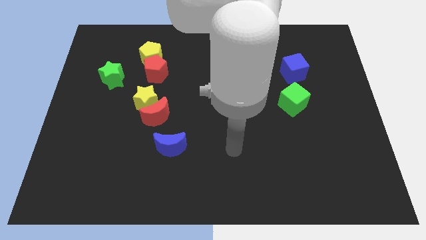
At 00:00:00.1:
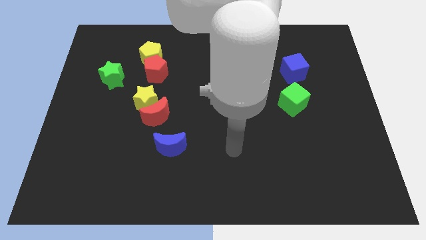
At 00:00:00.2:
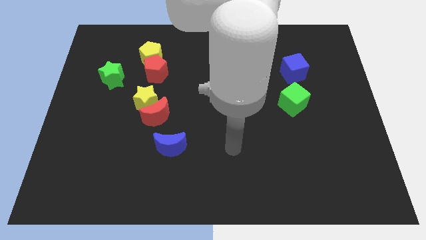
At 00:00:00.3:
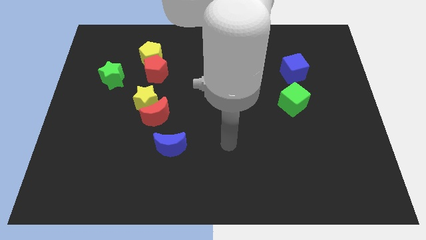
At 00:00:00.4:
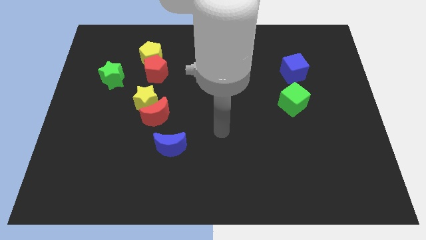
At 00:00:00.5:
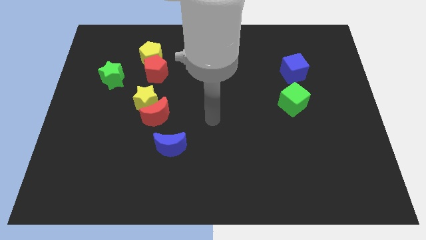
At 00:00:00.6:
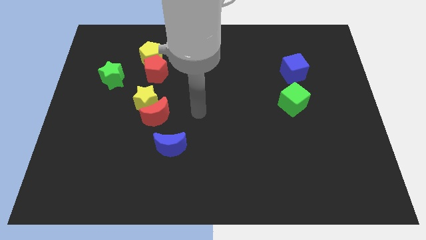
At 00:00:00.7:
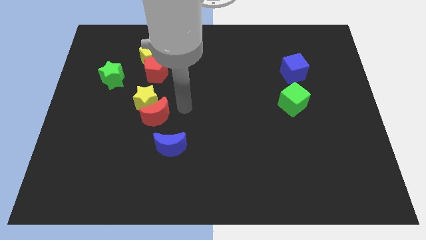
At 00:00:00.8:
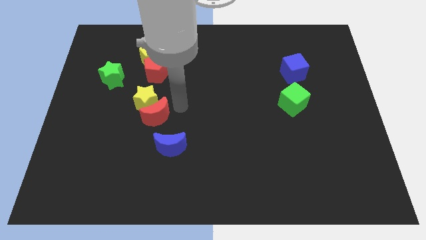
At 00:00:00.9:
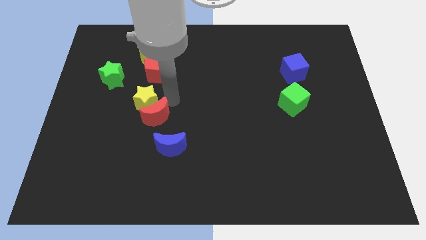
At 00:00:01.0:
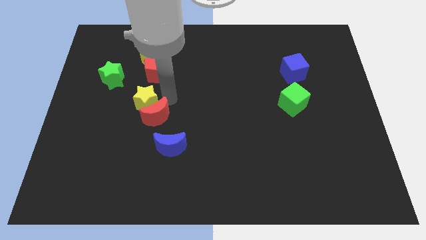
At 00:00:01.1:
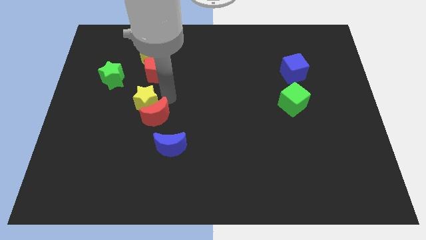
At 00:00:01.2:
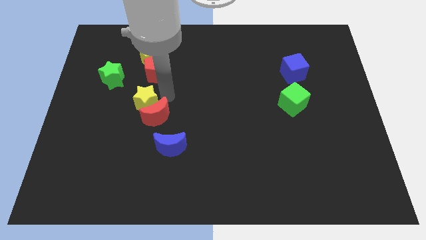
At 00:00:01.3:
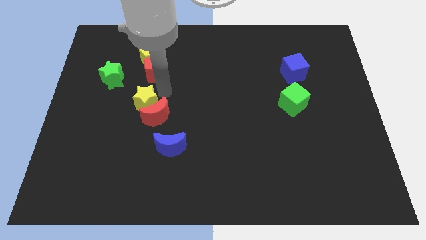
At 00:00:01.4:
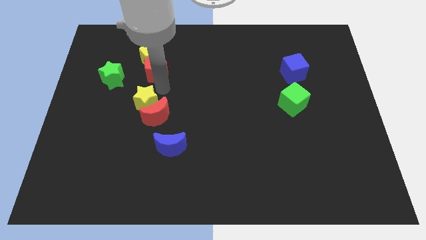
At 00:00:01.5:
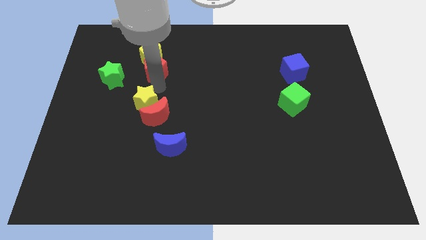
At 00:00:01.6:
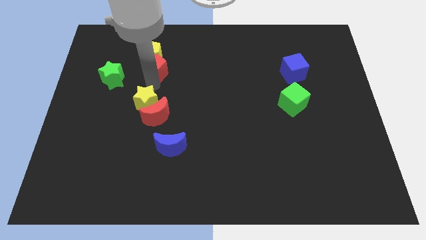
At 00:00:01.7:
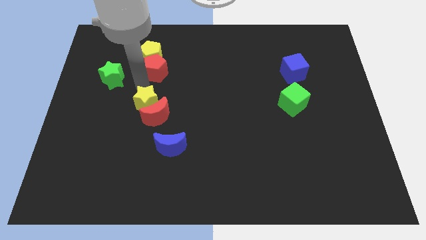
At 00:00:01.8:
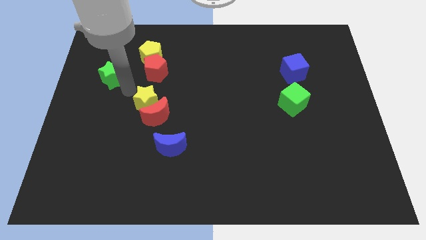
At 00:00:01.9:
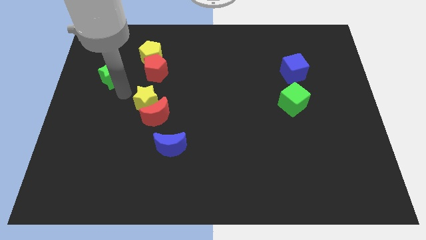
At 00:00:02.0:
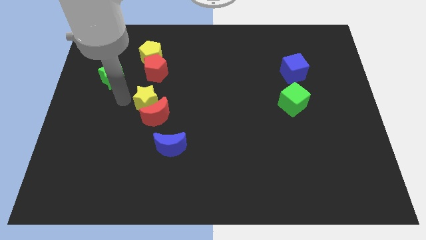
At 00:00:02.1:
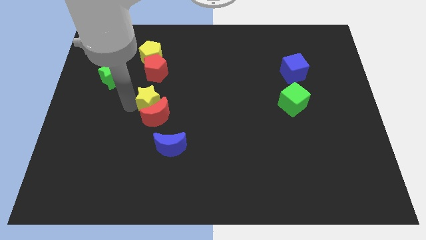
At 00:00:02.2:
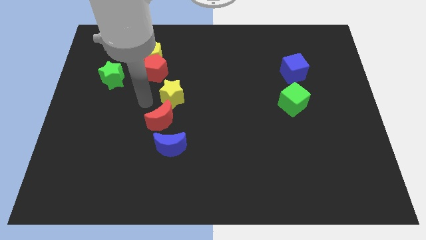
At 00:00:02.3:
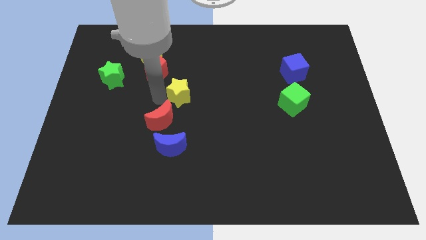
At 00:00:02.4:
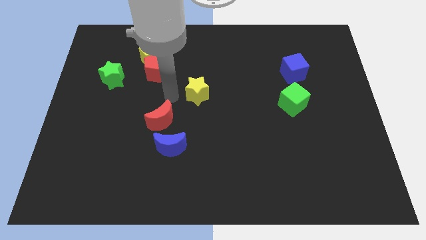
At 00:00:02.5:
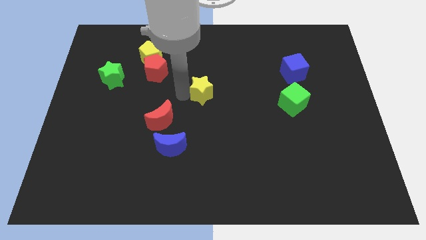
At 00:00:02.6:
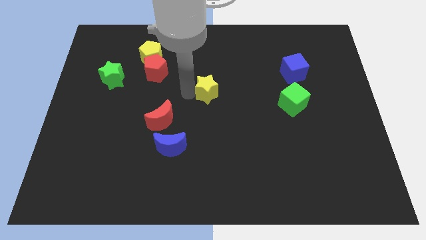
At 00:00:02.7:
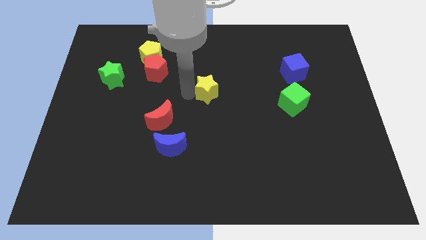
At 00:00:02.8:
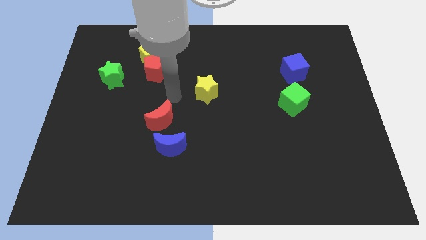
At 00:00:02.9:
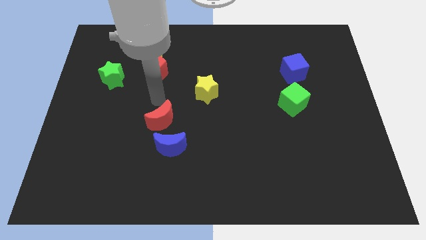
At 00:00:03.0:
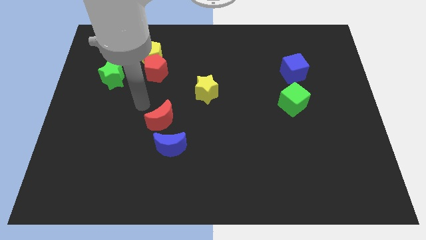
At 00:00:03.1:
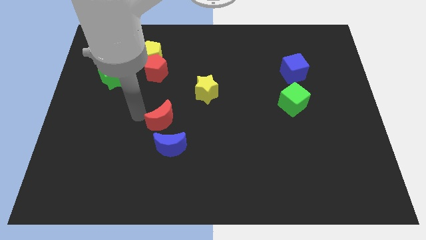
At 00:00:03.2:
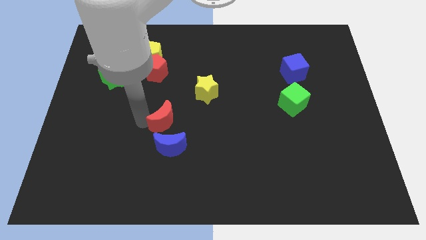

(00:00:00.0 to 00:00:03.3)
move yellow star towards middle of the board

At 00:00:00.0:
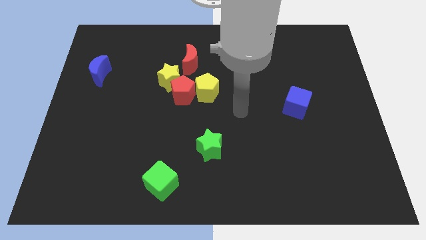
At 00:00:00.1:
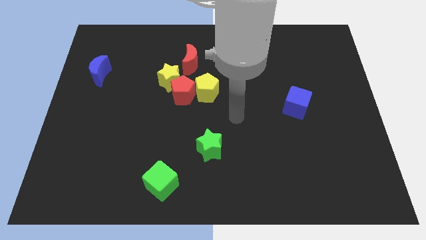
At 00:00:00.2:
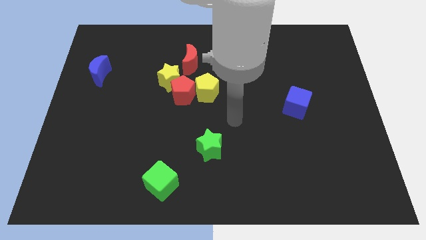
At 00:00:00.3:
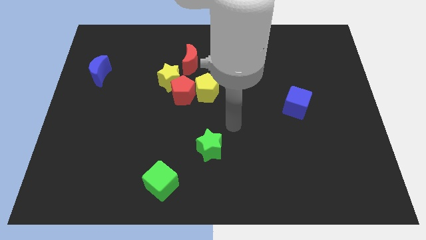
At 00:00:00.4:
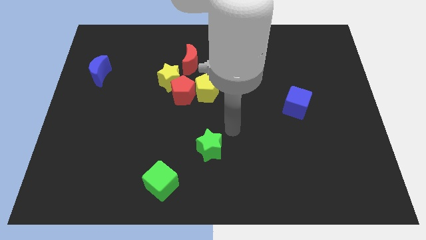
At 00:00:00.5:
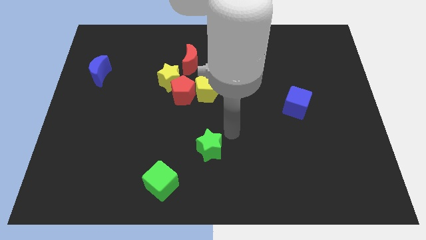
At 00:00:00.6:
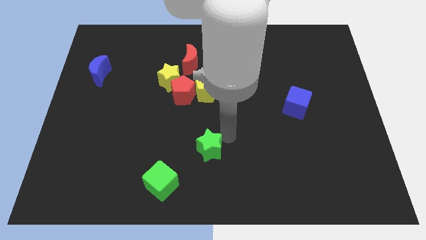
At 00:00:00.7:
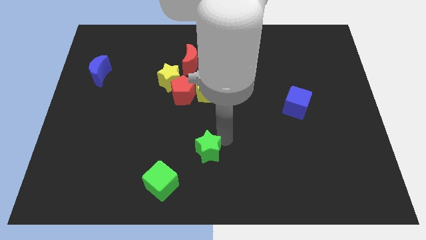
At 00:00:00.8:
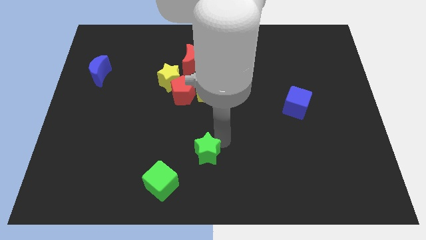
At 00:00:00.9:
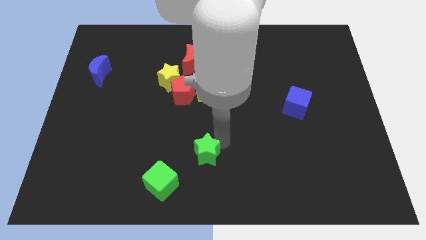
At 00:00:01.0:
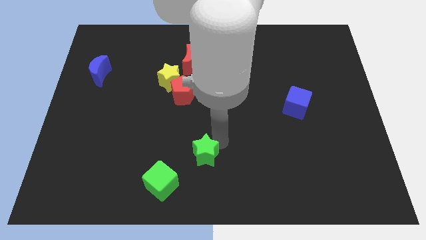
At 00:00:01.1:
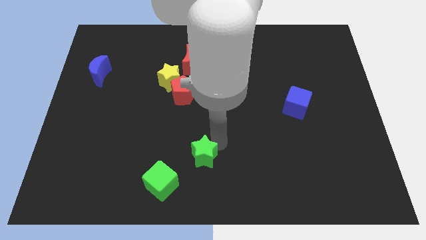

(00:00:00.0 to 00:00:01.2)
touch the green star

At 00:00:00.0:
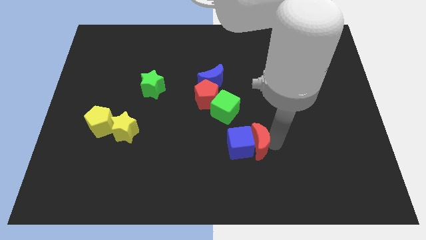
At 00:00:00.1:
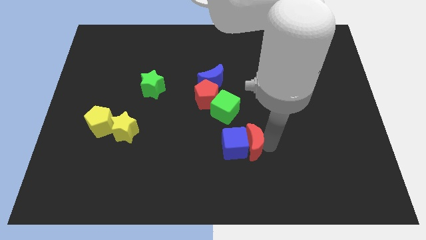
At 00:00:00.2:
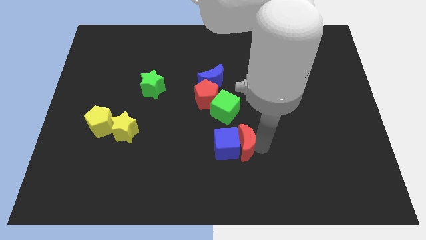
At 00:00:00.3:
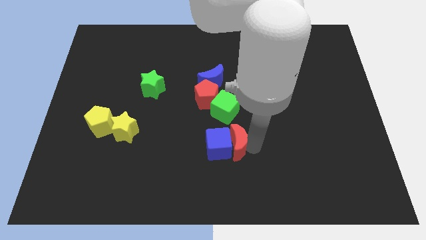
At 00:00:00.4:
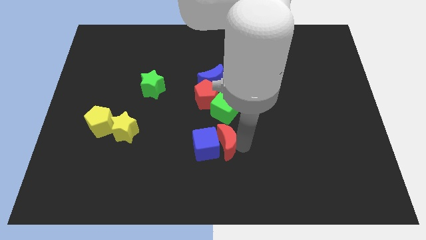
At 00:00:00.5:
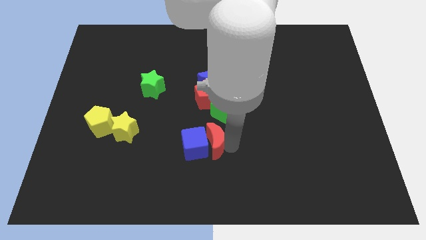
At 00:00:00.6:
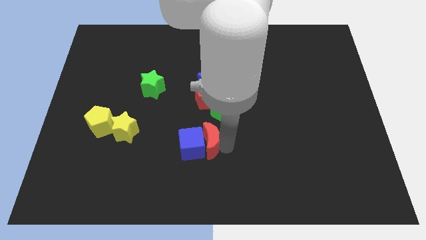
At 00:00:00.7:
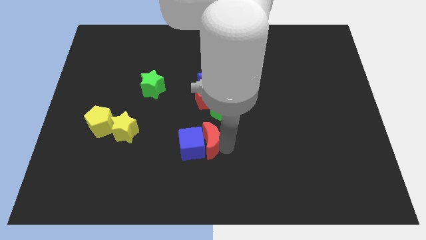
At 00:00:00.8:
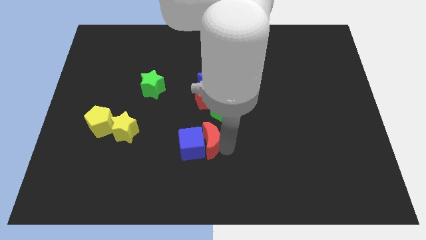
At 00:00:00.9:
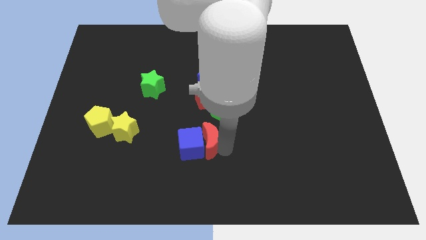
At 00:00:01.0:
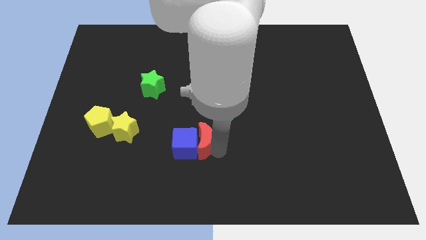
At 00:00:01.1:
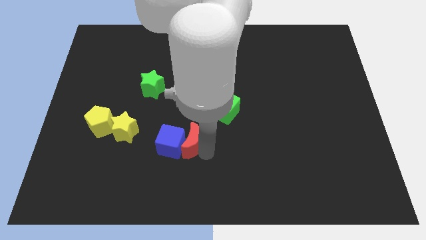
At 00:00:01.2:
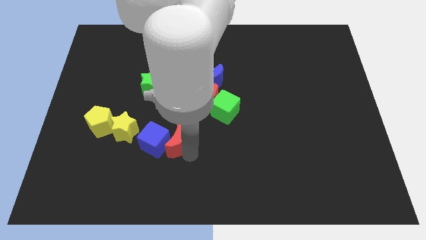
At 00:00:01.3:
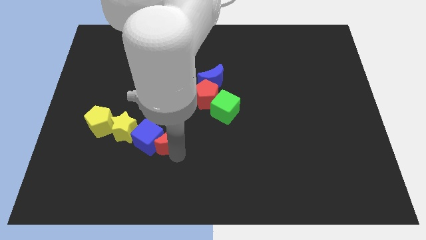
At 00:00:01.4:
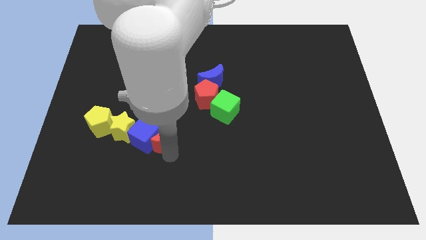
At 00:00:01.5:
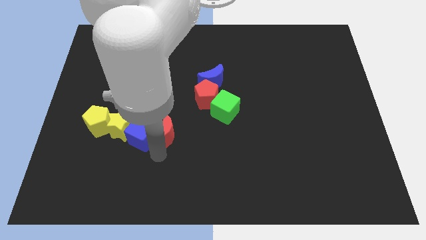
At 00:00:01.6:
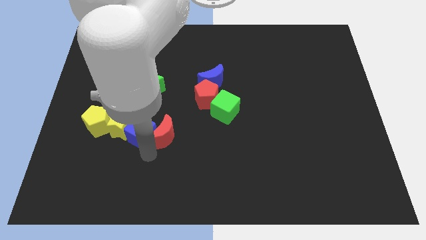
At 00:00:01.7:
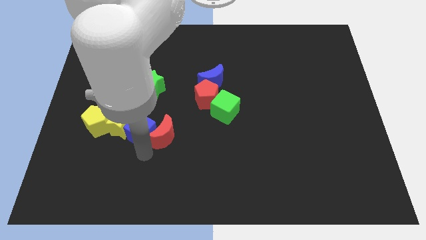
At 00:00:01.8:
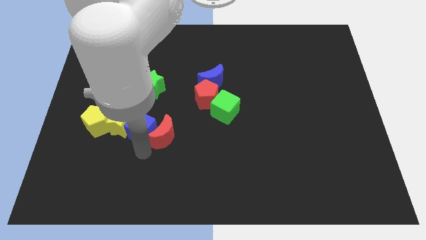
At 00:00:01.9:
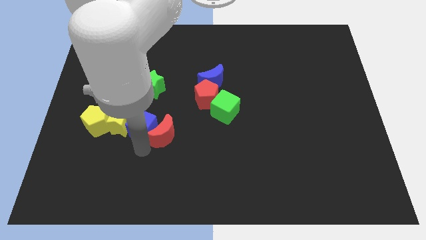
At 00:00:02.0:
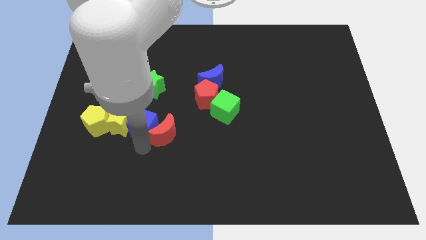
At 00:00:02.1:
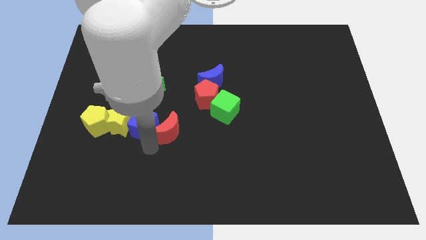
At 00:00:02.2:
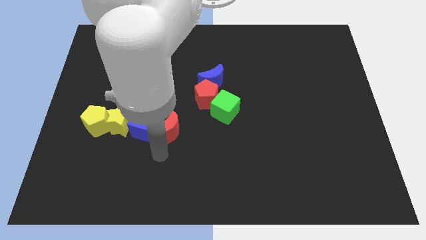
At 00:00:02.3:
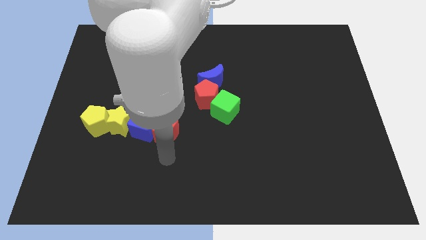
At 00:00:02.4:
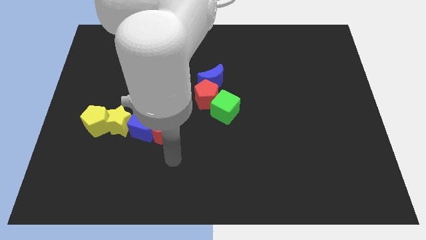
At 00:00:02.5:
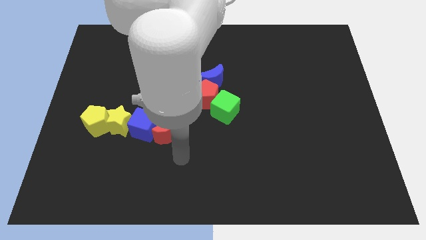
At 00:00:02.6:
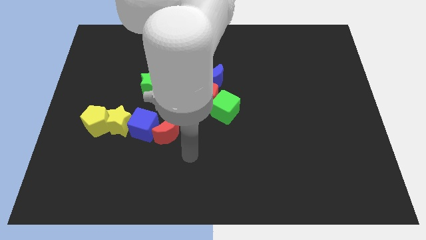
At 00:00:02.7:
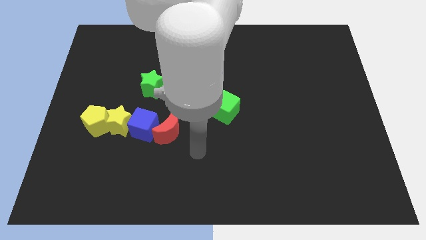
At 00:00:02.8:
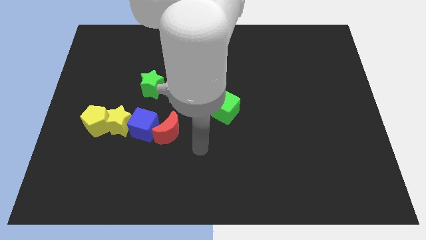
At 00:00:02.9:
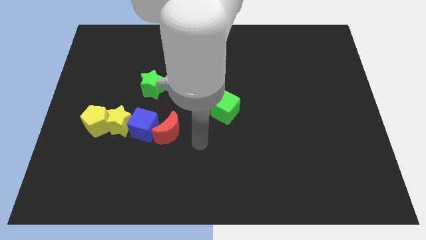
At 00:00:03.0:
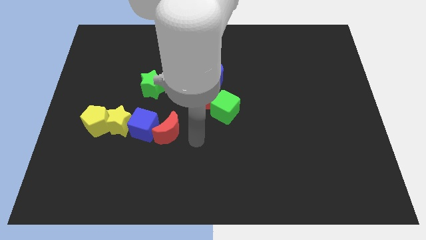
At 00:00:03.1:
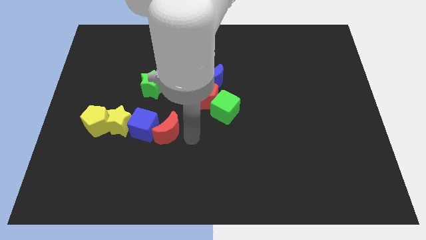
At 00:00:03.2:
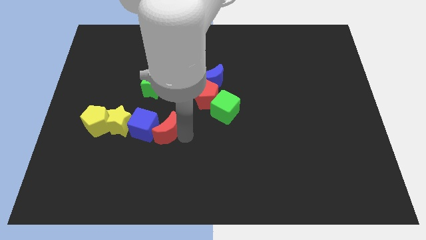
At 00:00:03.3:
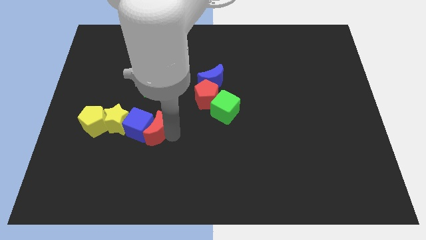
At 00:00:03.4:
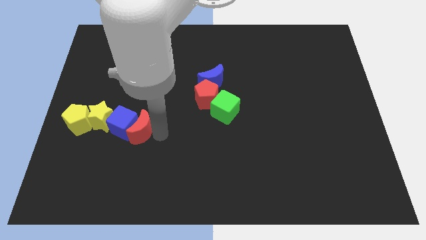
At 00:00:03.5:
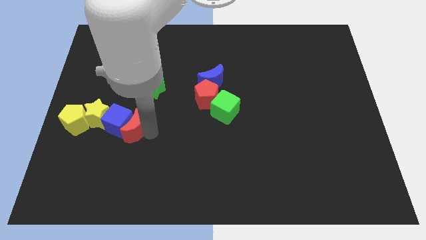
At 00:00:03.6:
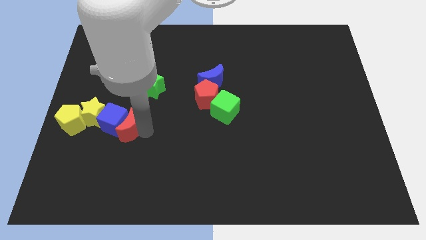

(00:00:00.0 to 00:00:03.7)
push the blue cube and red moon to right side of the yellow blocks

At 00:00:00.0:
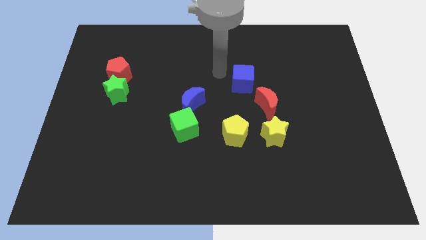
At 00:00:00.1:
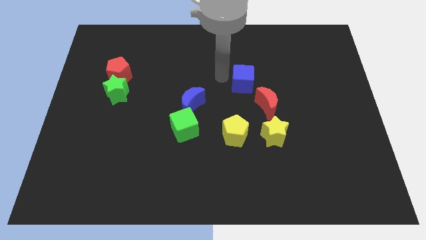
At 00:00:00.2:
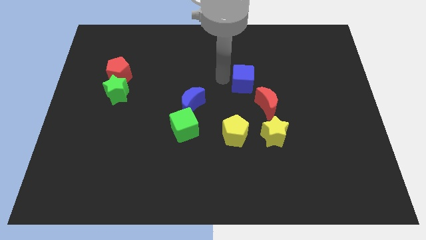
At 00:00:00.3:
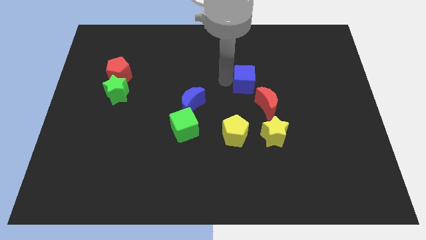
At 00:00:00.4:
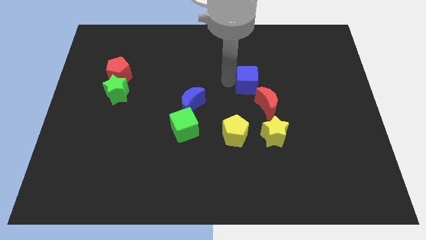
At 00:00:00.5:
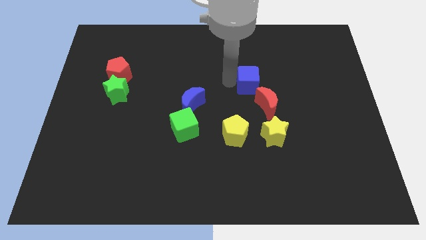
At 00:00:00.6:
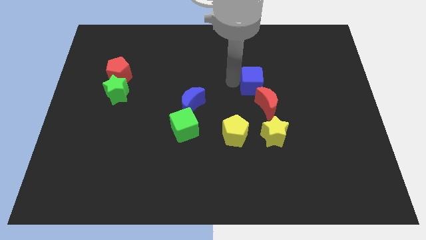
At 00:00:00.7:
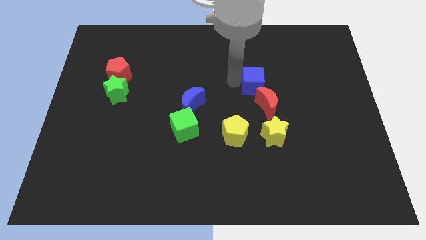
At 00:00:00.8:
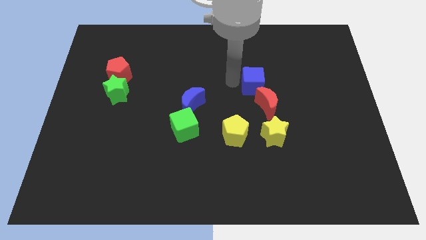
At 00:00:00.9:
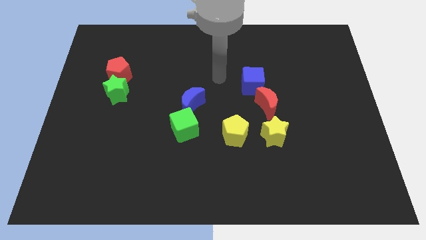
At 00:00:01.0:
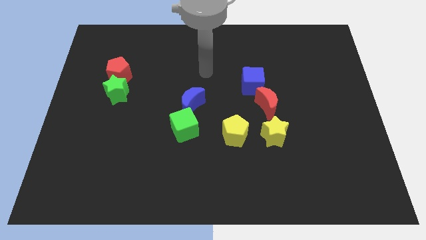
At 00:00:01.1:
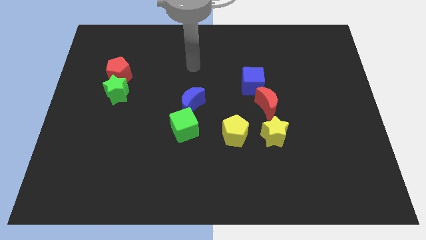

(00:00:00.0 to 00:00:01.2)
place the blue cube above the red crescent
